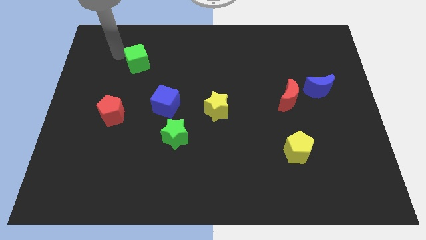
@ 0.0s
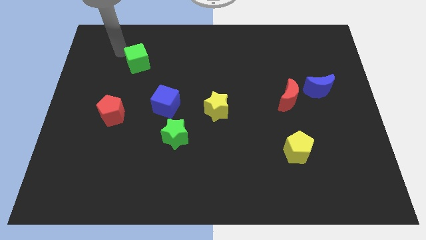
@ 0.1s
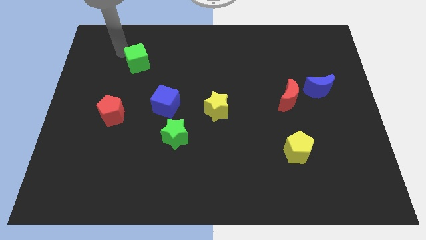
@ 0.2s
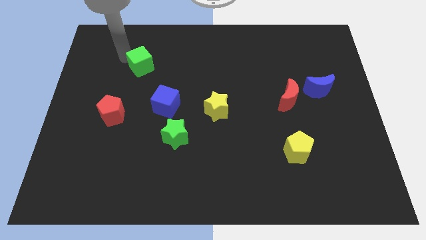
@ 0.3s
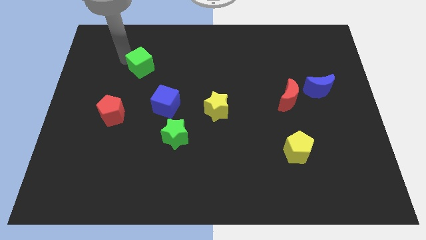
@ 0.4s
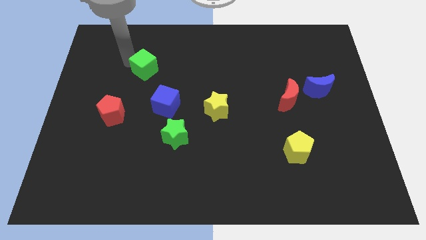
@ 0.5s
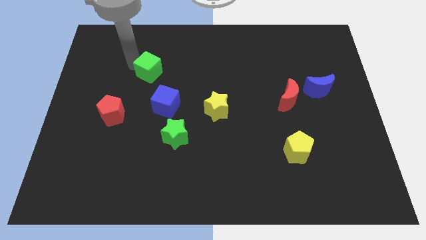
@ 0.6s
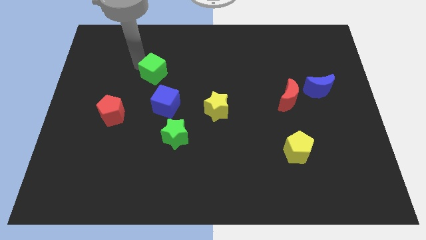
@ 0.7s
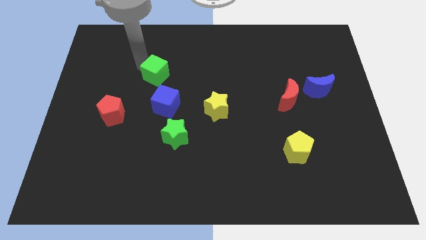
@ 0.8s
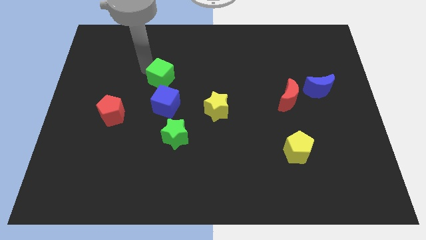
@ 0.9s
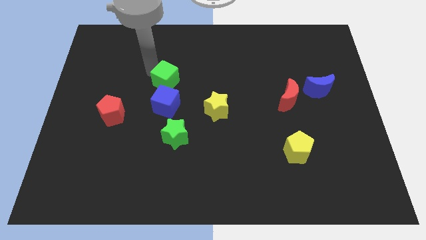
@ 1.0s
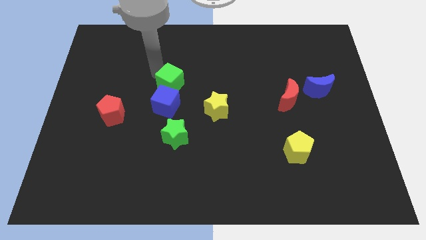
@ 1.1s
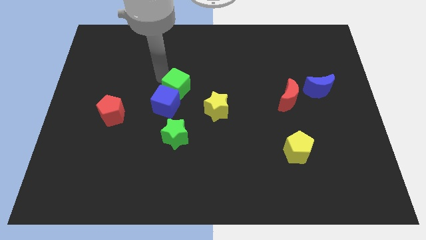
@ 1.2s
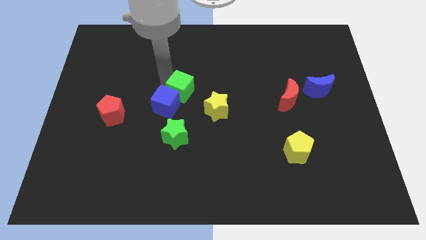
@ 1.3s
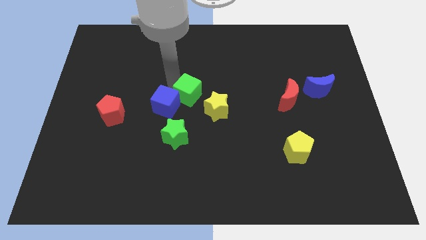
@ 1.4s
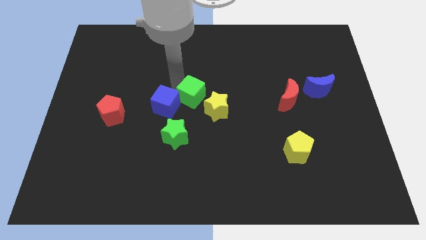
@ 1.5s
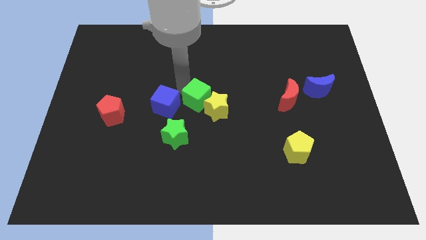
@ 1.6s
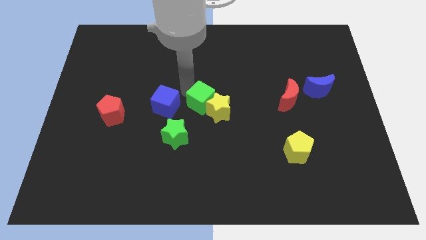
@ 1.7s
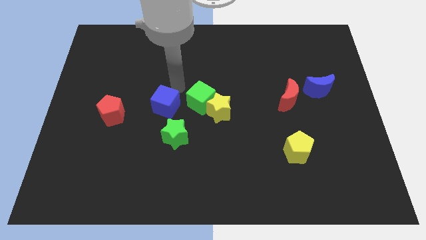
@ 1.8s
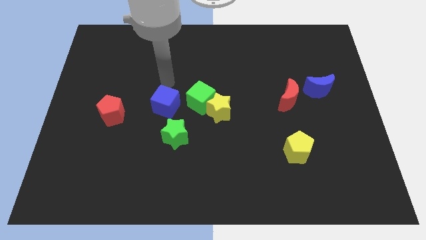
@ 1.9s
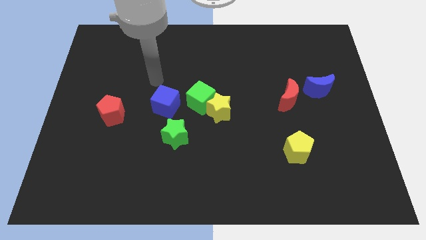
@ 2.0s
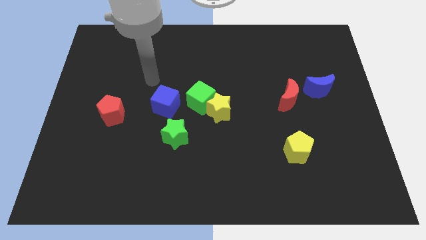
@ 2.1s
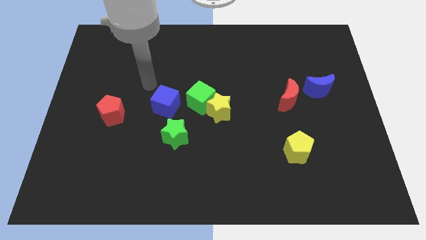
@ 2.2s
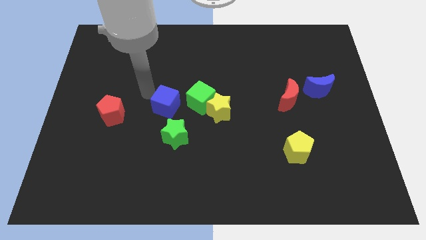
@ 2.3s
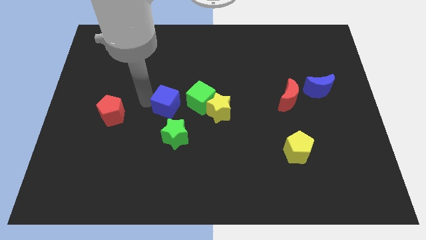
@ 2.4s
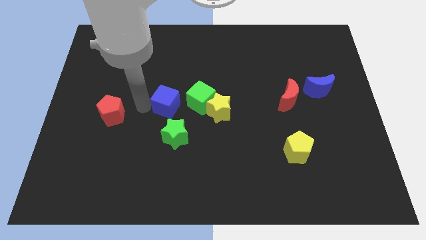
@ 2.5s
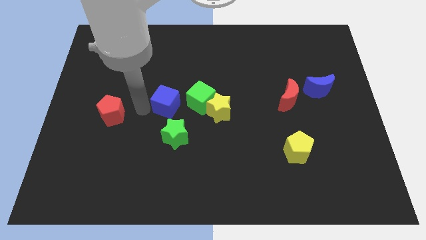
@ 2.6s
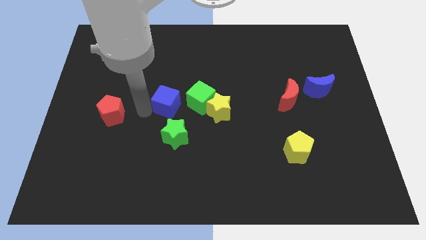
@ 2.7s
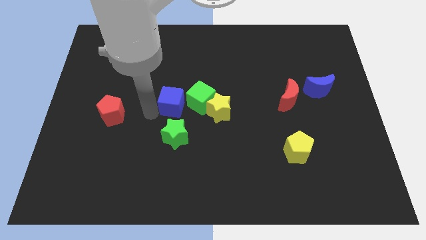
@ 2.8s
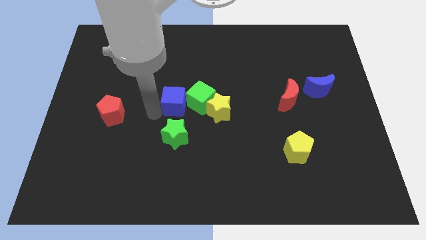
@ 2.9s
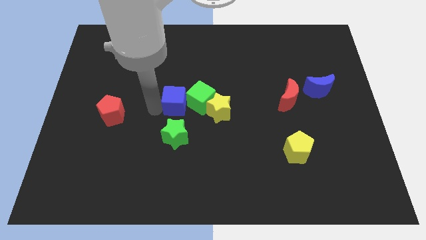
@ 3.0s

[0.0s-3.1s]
push green cube to the center of the board

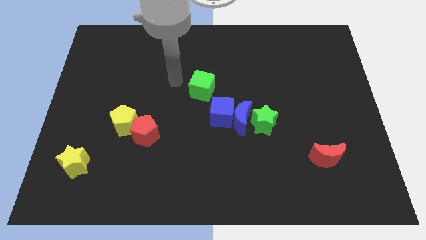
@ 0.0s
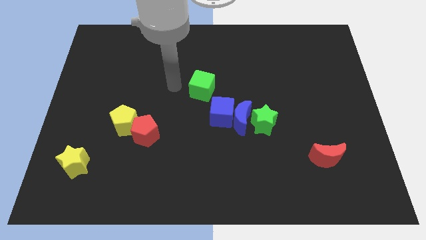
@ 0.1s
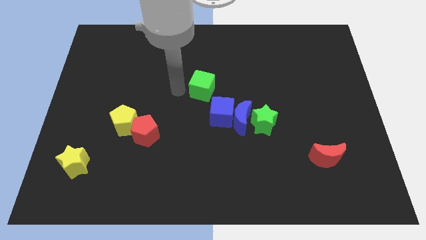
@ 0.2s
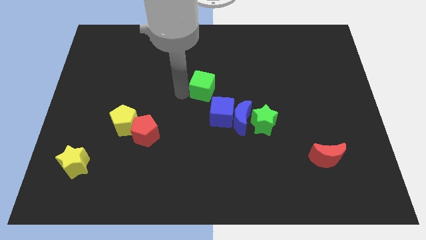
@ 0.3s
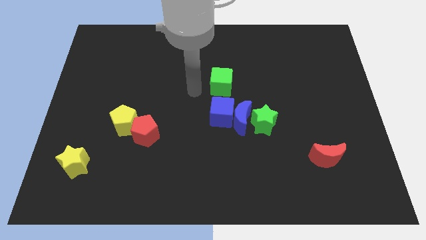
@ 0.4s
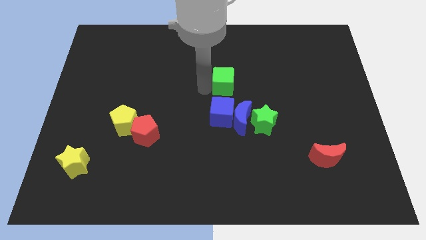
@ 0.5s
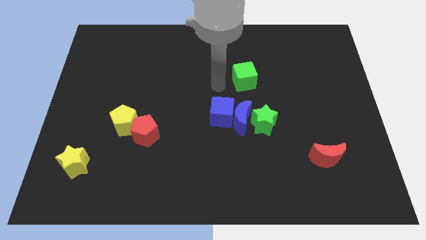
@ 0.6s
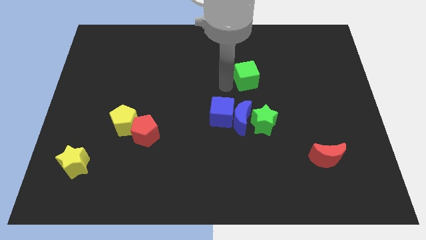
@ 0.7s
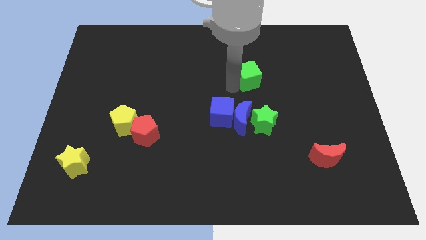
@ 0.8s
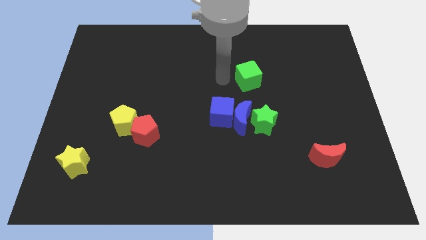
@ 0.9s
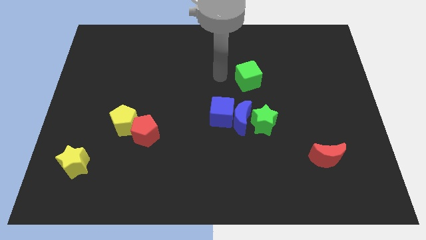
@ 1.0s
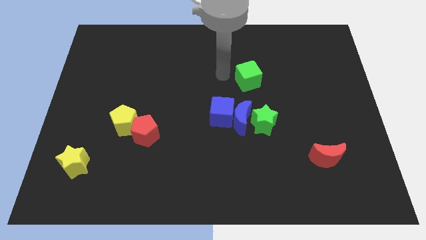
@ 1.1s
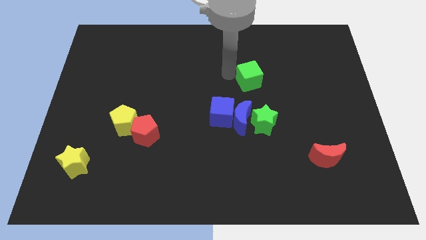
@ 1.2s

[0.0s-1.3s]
move the green cube to the top of the blue crescent

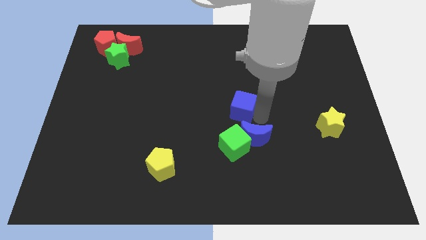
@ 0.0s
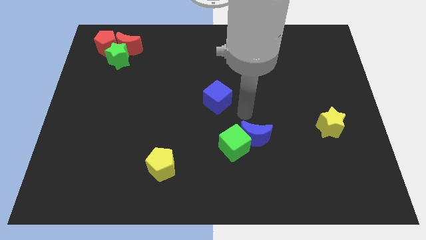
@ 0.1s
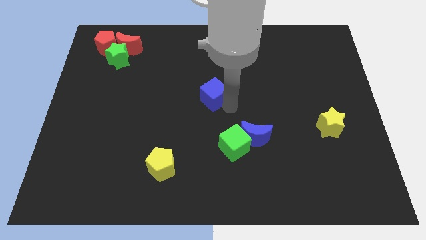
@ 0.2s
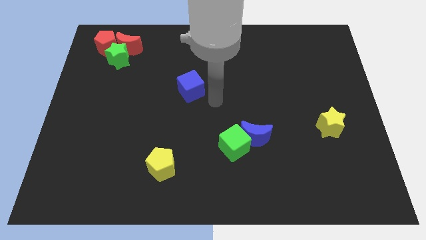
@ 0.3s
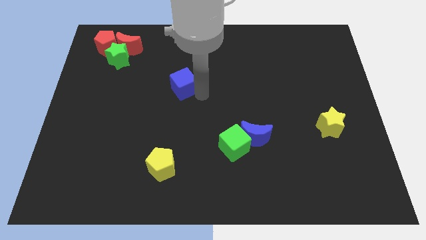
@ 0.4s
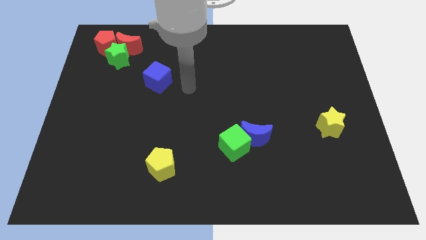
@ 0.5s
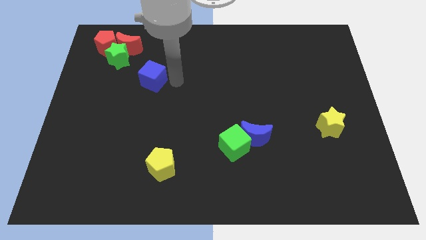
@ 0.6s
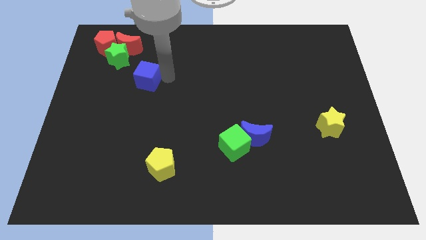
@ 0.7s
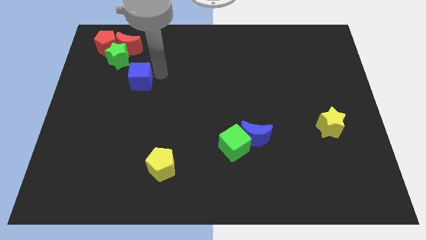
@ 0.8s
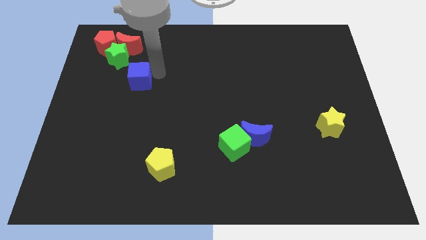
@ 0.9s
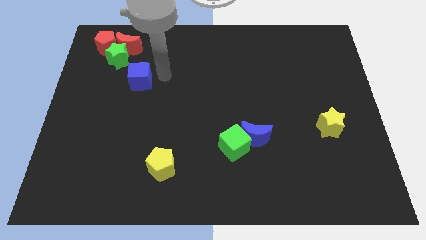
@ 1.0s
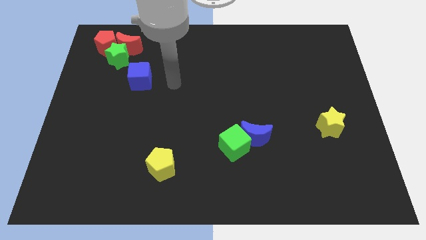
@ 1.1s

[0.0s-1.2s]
place the blue cube close to the green star

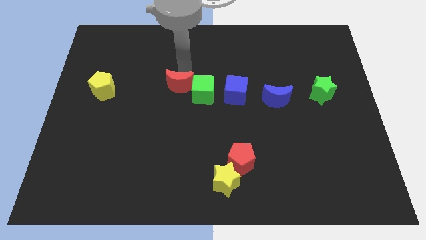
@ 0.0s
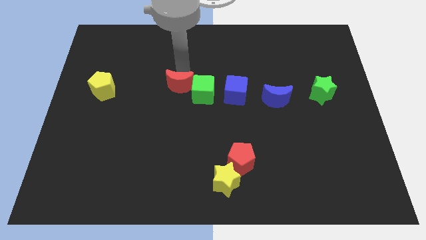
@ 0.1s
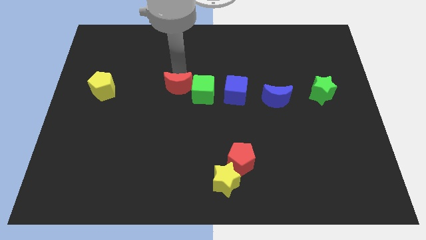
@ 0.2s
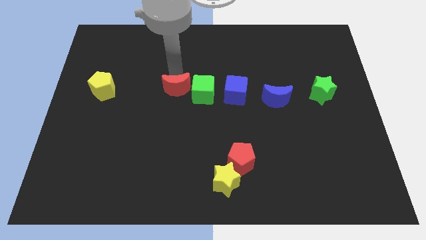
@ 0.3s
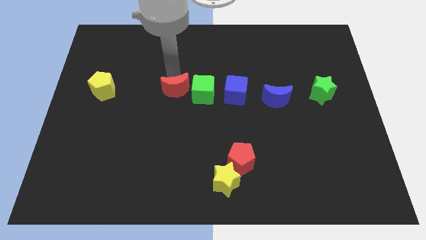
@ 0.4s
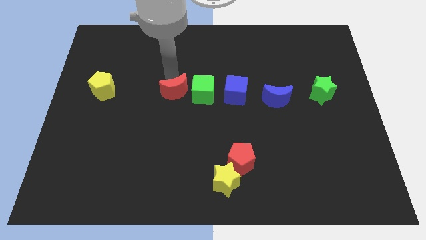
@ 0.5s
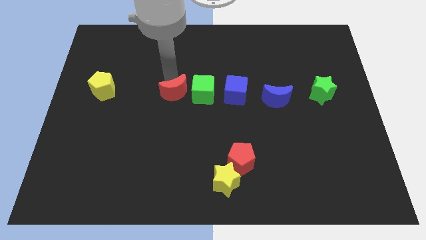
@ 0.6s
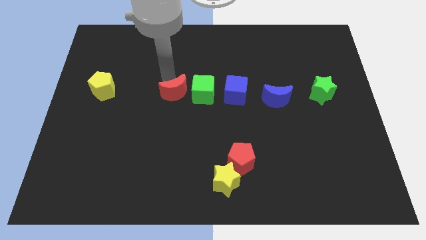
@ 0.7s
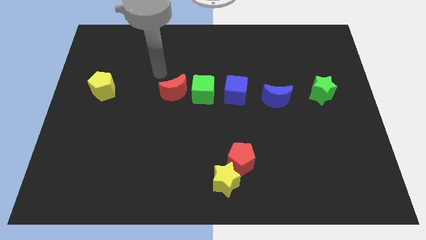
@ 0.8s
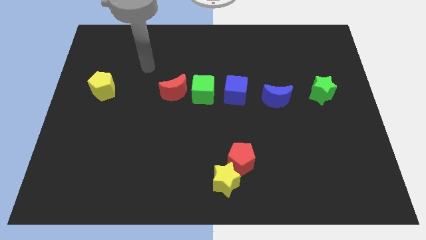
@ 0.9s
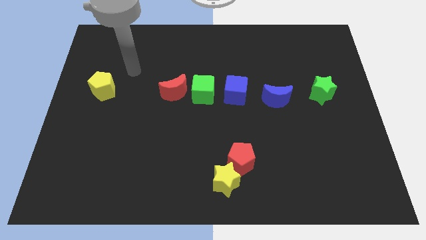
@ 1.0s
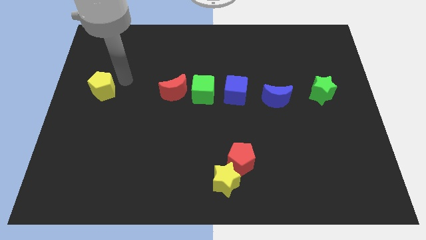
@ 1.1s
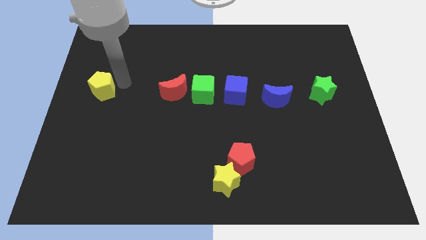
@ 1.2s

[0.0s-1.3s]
move the red moon to the left side of the green cube

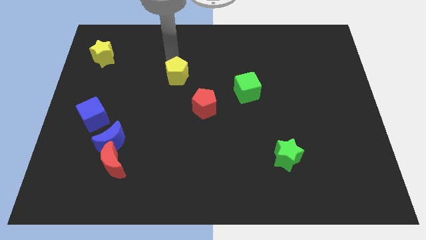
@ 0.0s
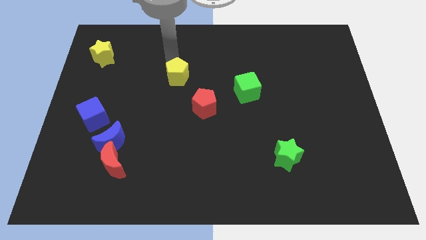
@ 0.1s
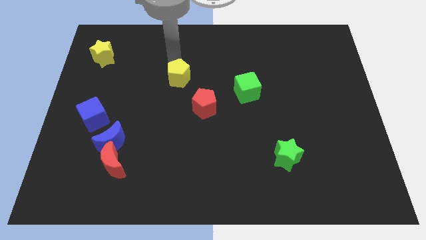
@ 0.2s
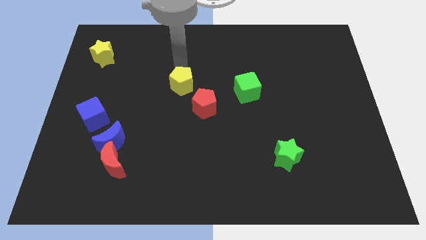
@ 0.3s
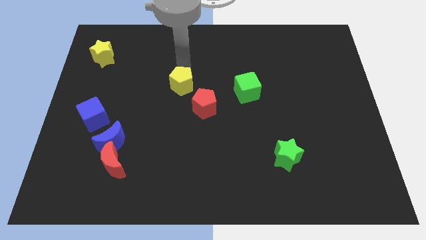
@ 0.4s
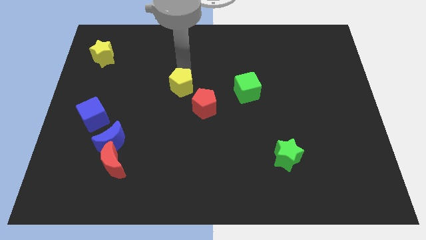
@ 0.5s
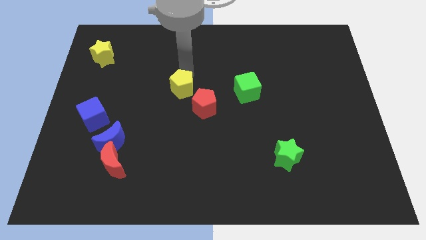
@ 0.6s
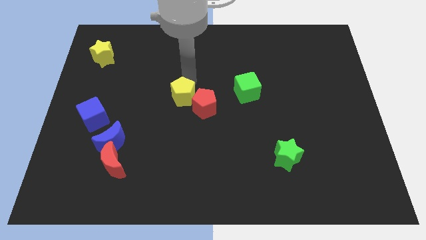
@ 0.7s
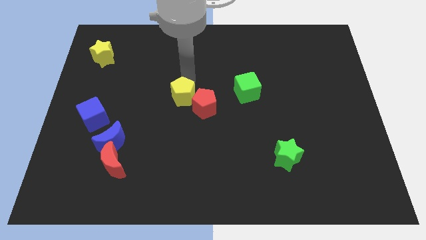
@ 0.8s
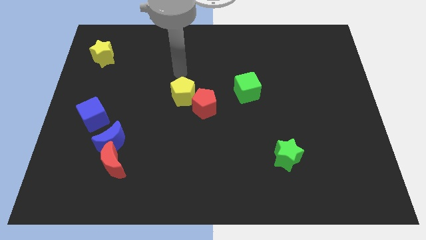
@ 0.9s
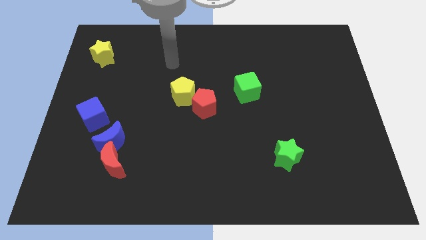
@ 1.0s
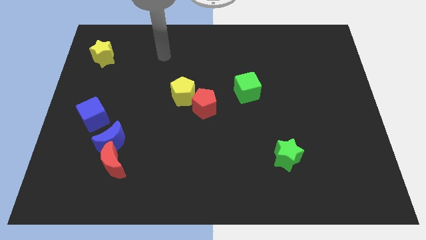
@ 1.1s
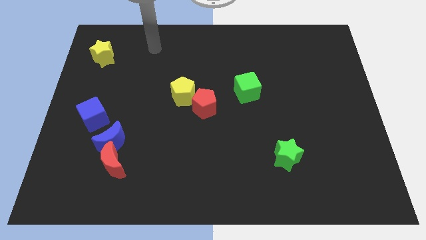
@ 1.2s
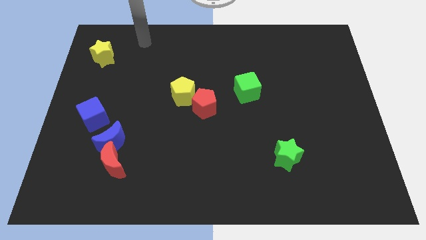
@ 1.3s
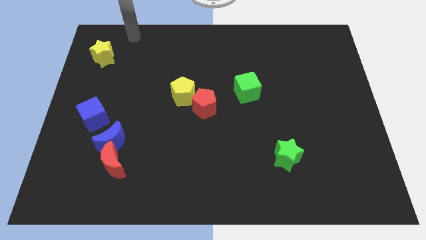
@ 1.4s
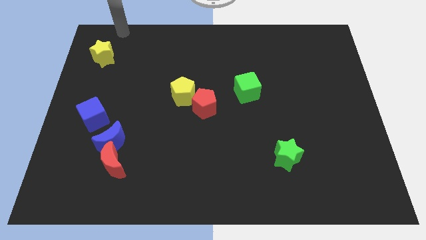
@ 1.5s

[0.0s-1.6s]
move the yellow pentagon towards the red pentagon

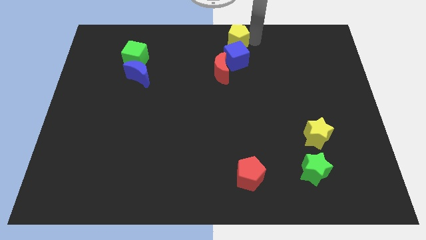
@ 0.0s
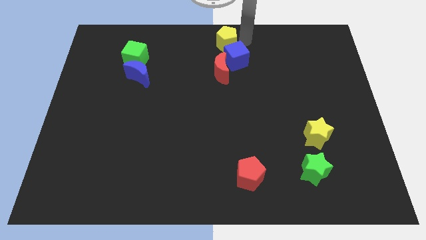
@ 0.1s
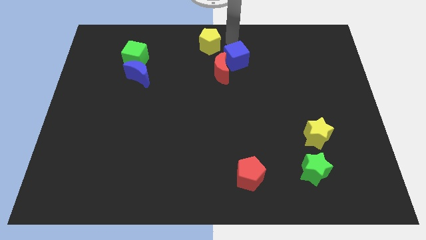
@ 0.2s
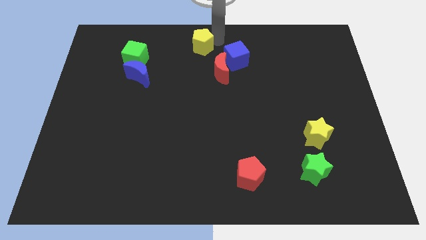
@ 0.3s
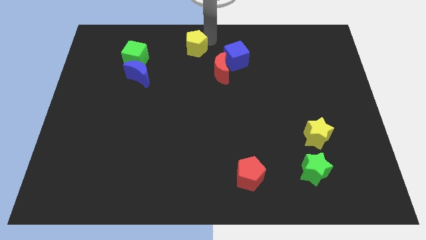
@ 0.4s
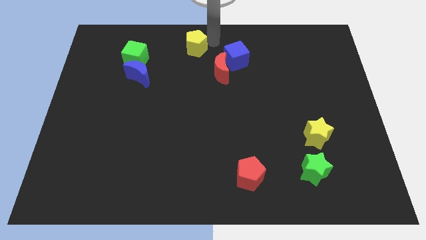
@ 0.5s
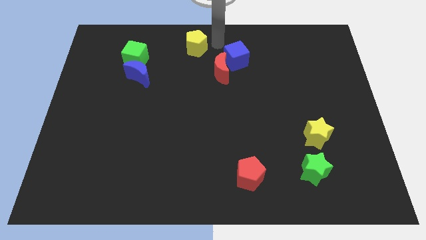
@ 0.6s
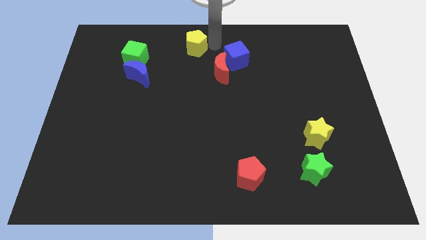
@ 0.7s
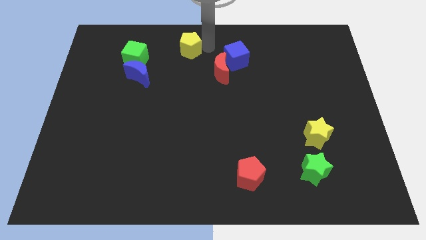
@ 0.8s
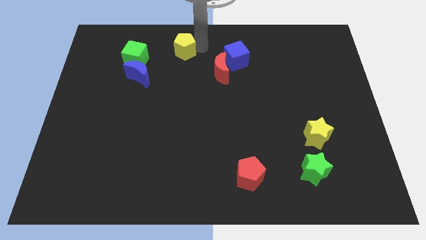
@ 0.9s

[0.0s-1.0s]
move the yellow pentagon to the left of the board
